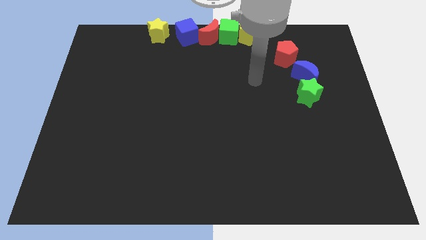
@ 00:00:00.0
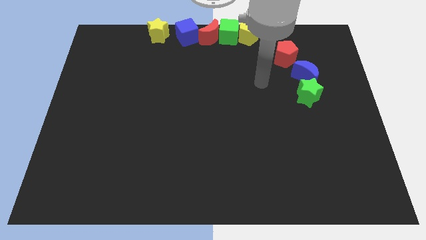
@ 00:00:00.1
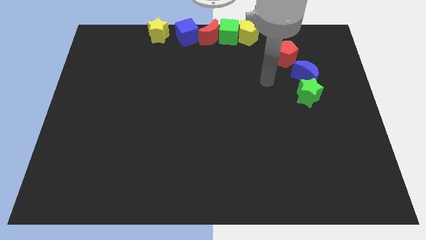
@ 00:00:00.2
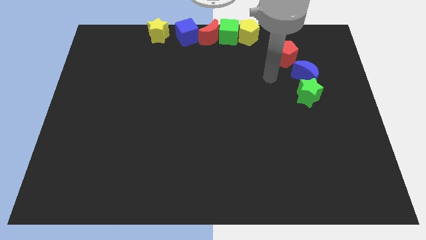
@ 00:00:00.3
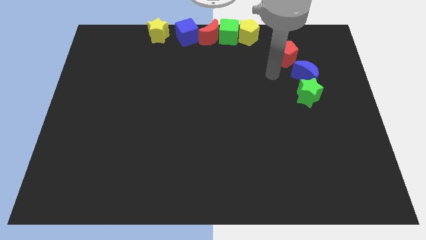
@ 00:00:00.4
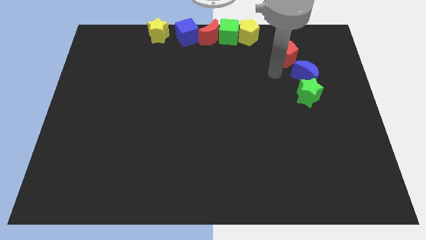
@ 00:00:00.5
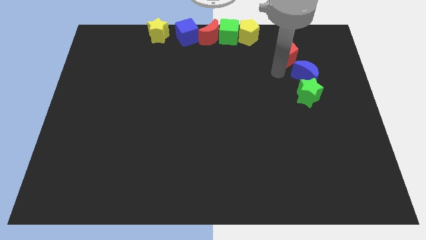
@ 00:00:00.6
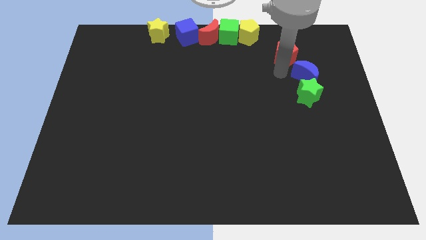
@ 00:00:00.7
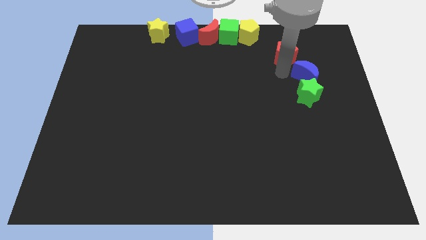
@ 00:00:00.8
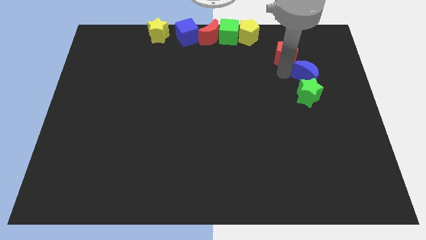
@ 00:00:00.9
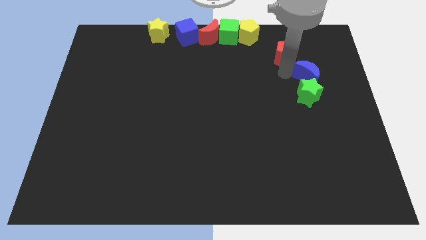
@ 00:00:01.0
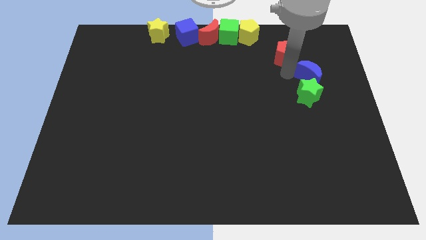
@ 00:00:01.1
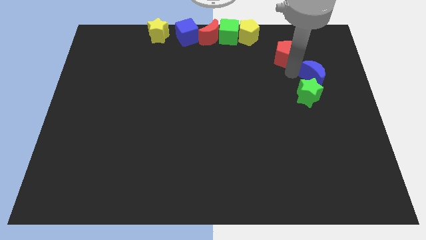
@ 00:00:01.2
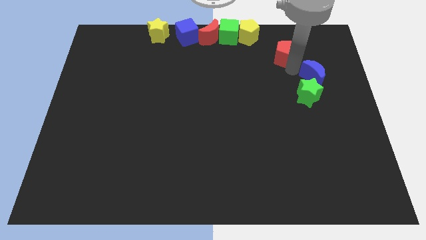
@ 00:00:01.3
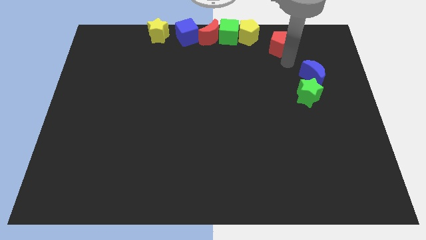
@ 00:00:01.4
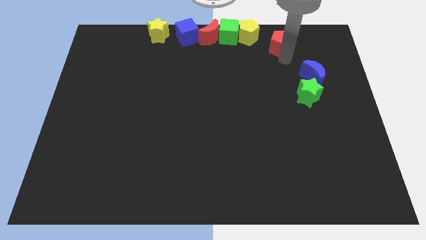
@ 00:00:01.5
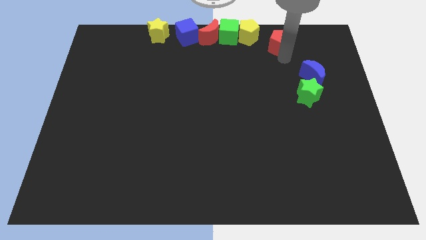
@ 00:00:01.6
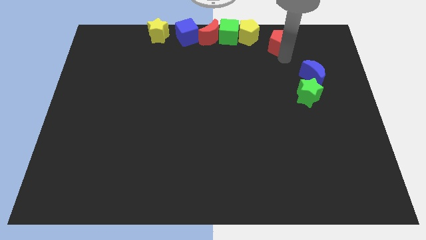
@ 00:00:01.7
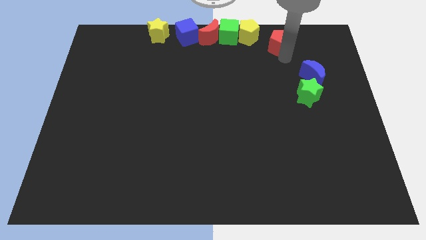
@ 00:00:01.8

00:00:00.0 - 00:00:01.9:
separate the red pentagon from the blue moon

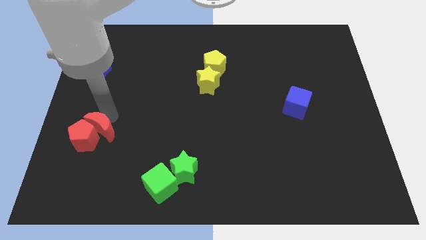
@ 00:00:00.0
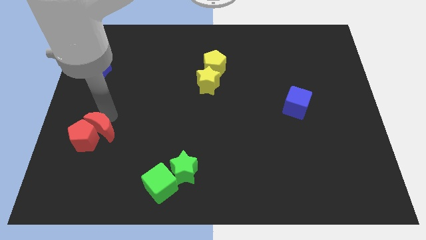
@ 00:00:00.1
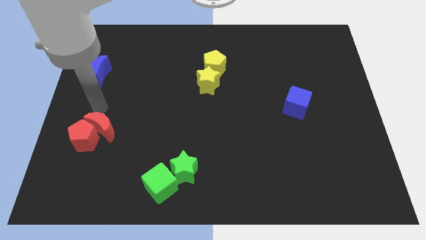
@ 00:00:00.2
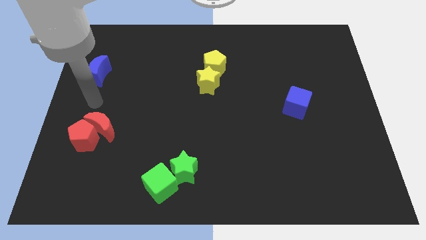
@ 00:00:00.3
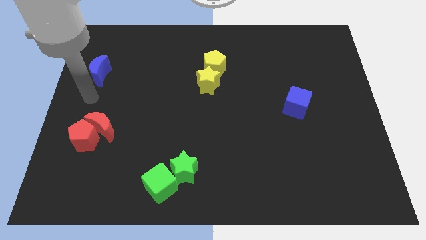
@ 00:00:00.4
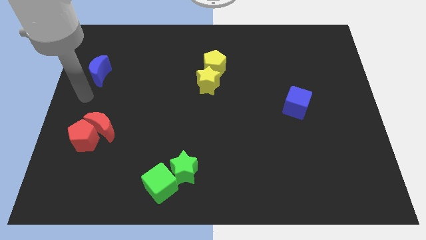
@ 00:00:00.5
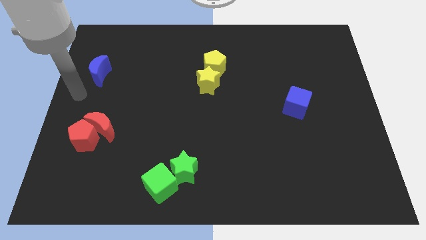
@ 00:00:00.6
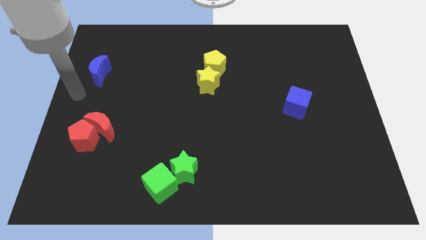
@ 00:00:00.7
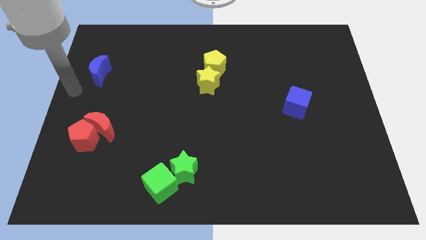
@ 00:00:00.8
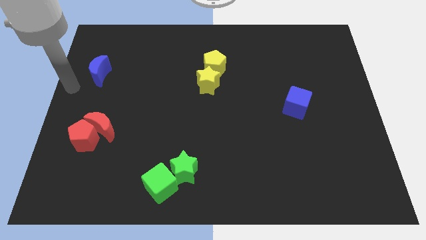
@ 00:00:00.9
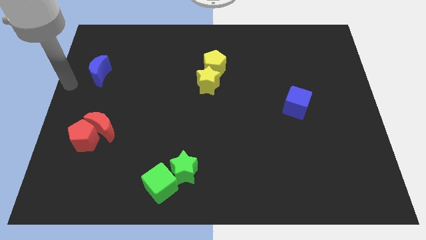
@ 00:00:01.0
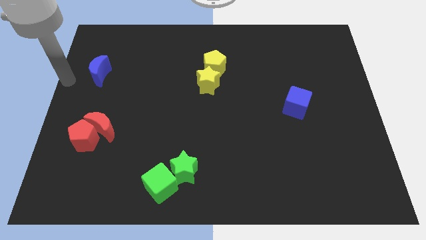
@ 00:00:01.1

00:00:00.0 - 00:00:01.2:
go away from the red moon

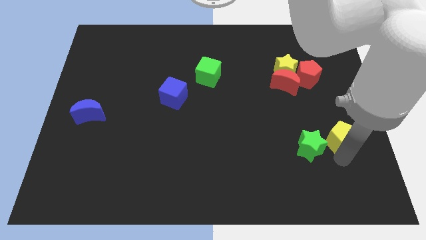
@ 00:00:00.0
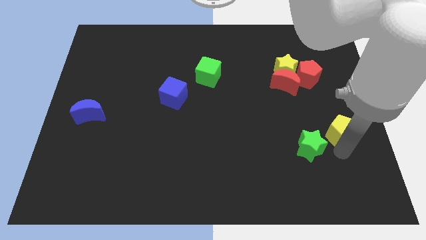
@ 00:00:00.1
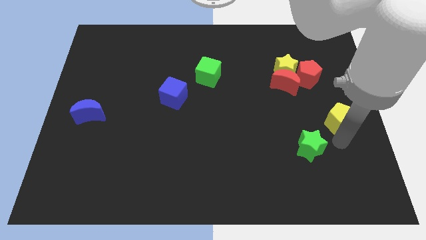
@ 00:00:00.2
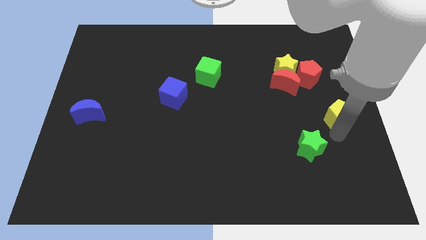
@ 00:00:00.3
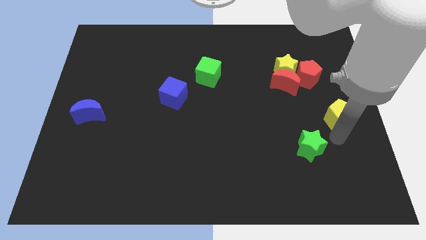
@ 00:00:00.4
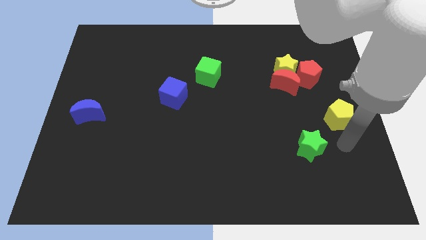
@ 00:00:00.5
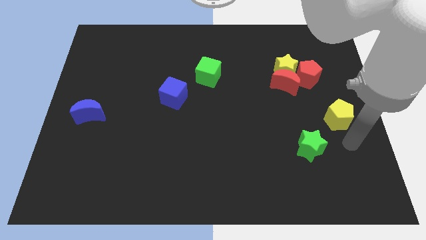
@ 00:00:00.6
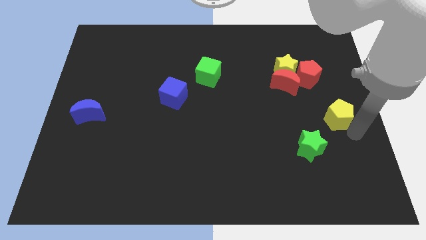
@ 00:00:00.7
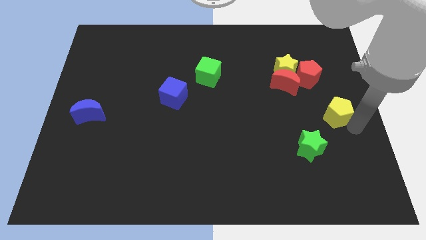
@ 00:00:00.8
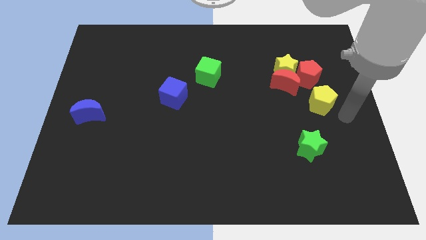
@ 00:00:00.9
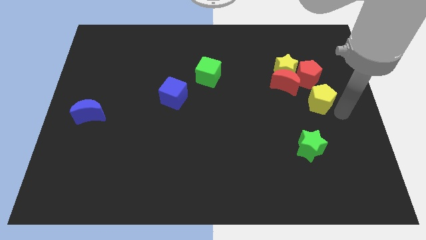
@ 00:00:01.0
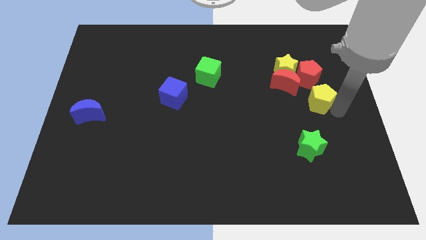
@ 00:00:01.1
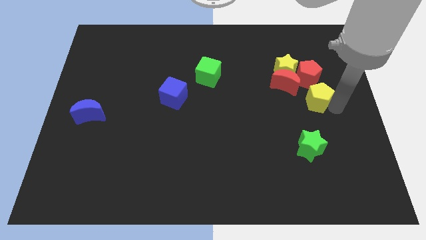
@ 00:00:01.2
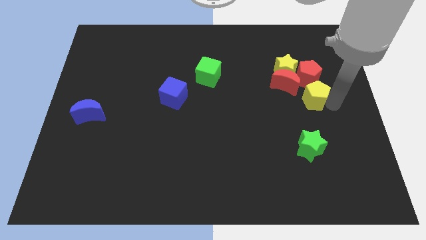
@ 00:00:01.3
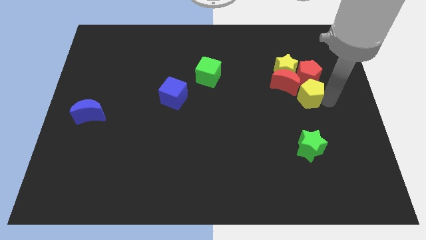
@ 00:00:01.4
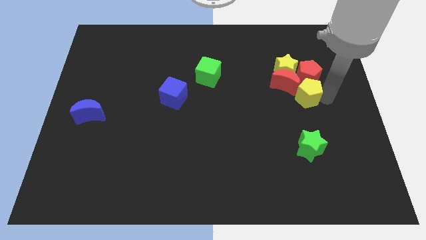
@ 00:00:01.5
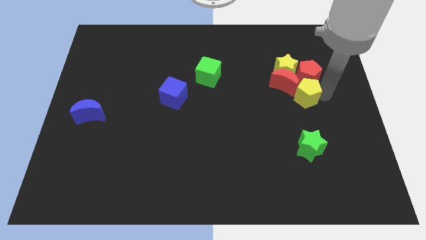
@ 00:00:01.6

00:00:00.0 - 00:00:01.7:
place yellow pentagon to the bottom of red pentagon

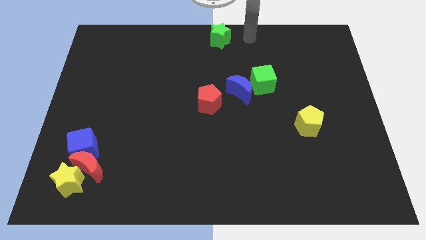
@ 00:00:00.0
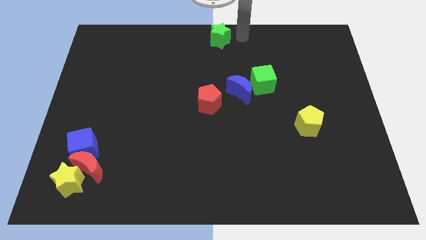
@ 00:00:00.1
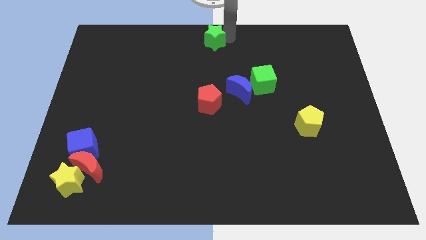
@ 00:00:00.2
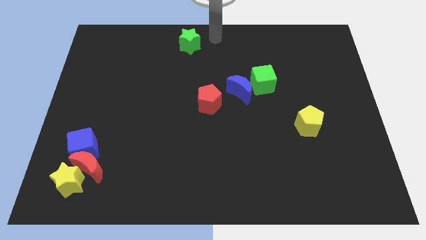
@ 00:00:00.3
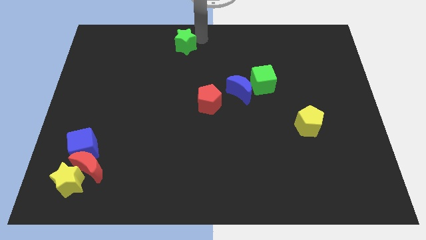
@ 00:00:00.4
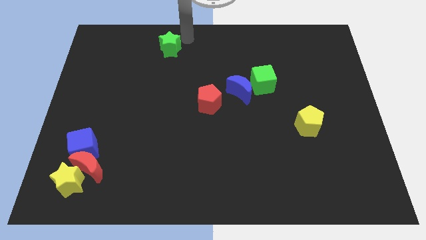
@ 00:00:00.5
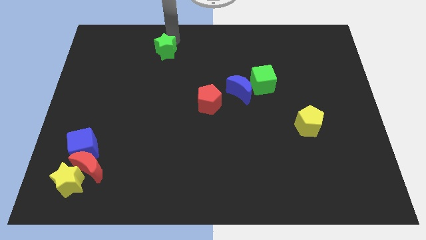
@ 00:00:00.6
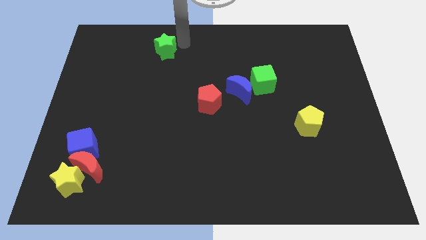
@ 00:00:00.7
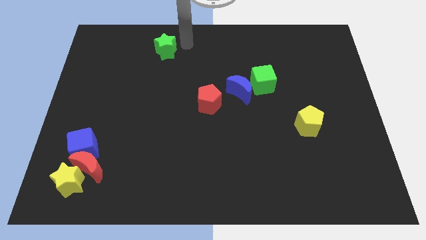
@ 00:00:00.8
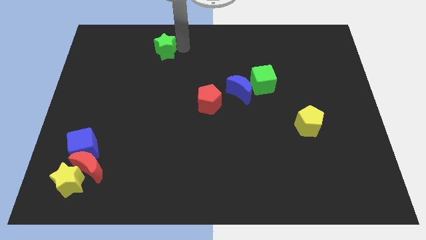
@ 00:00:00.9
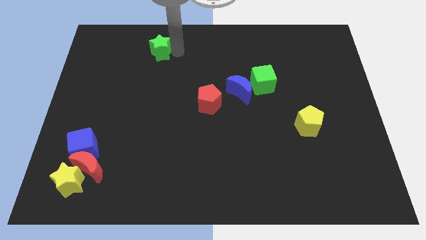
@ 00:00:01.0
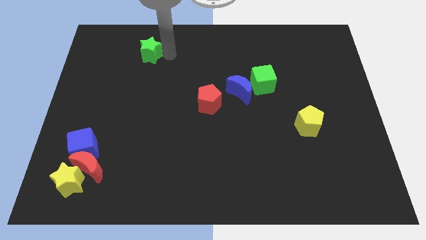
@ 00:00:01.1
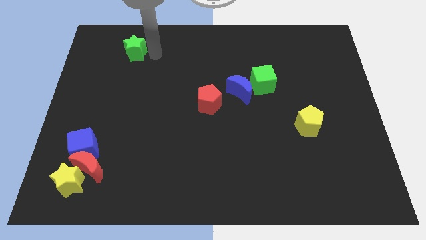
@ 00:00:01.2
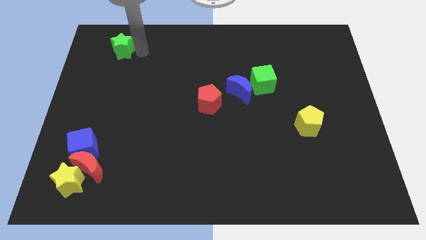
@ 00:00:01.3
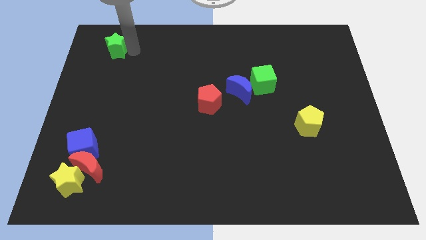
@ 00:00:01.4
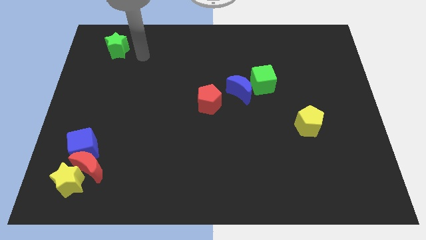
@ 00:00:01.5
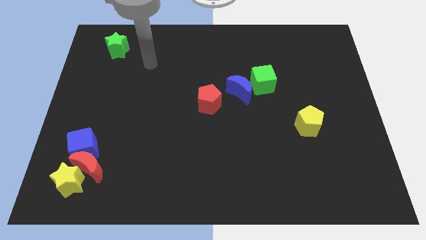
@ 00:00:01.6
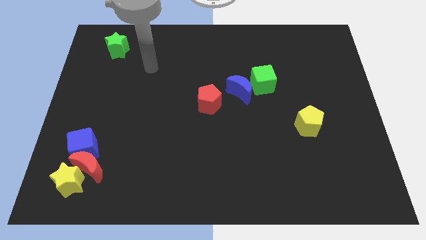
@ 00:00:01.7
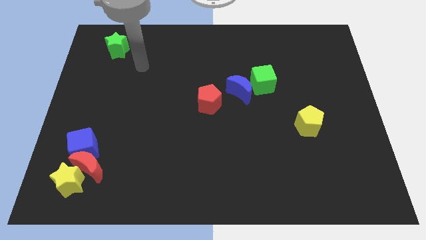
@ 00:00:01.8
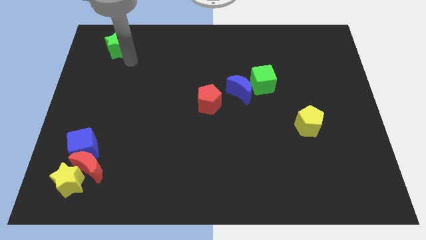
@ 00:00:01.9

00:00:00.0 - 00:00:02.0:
move the green star to the top of the blue cube

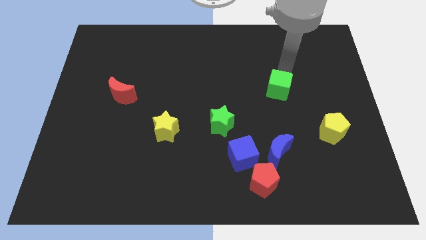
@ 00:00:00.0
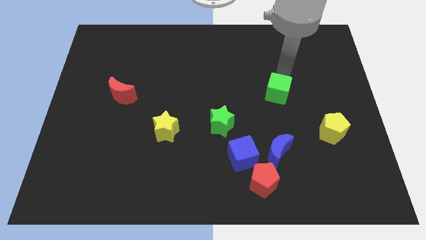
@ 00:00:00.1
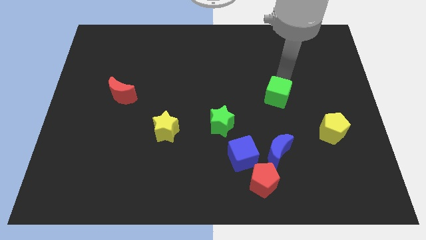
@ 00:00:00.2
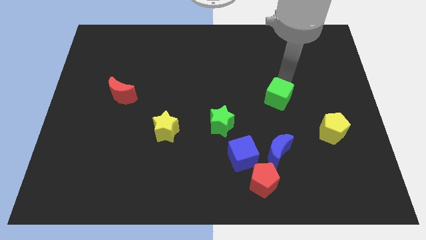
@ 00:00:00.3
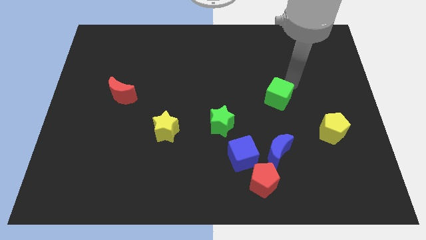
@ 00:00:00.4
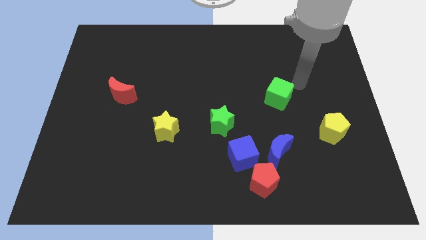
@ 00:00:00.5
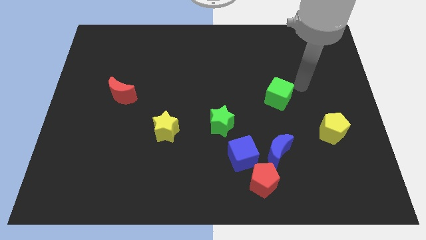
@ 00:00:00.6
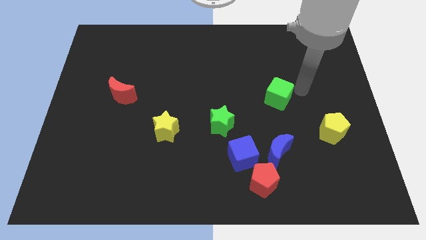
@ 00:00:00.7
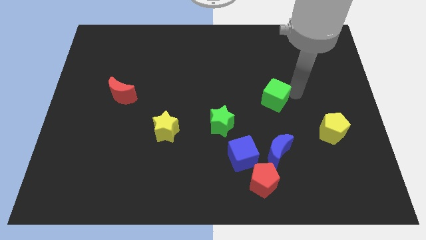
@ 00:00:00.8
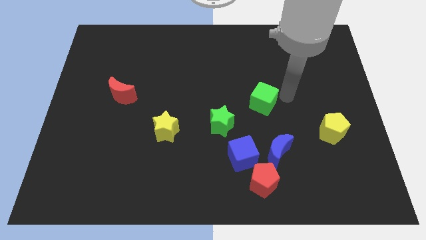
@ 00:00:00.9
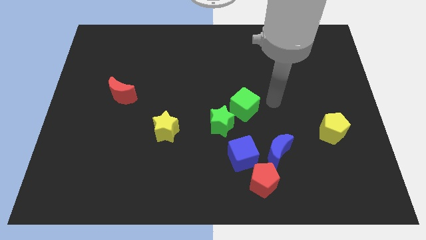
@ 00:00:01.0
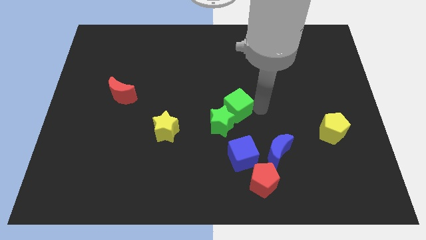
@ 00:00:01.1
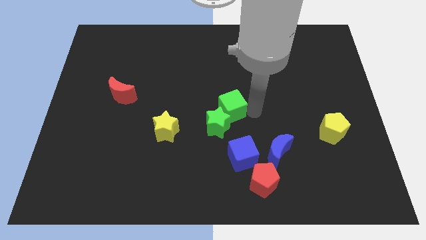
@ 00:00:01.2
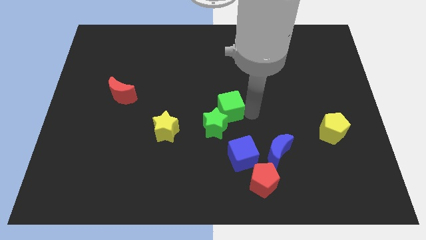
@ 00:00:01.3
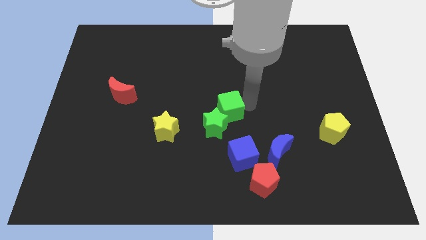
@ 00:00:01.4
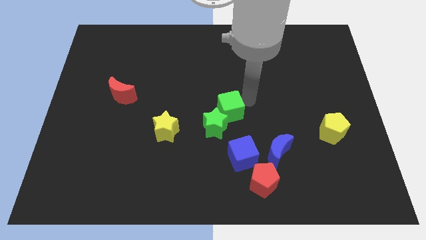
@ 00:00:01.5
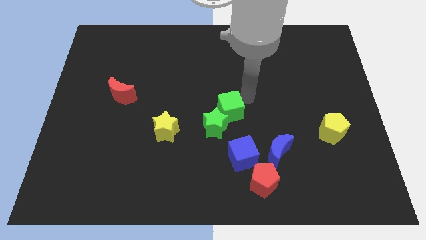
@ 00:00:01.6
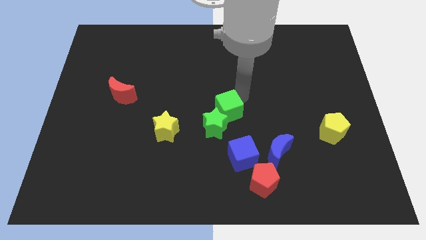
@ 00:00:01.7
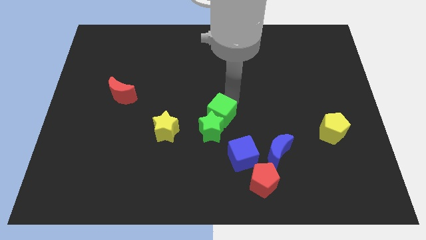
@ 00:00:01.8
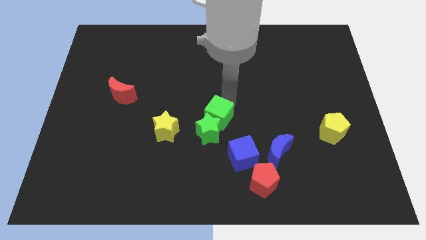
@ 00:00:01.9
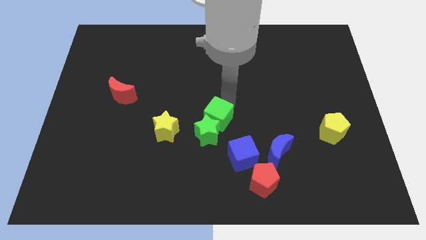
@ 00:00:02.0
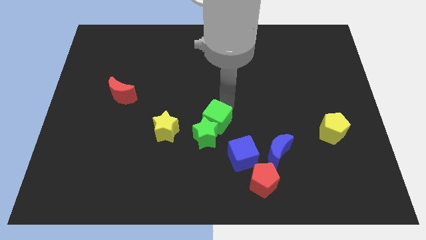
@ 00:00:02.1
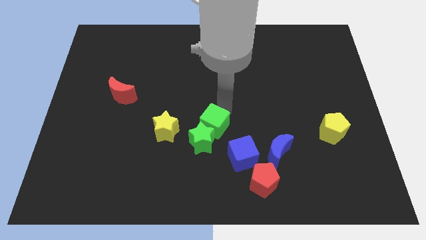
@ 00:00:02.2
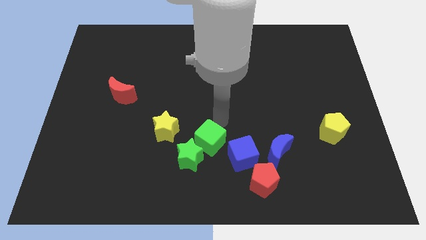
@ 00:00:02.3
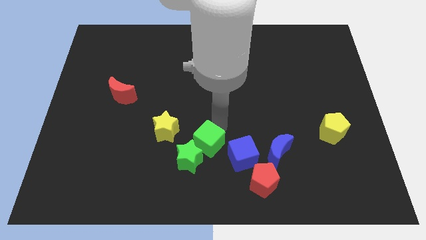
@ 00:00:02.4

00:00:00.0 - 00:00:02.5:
push green cube in to green star
